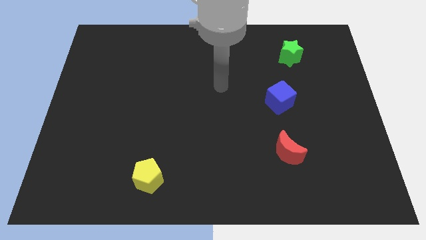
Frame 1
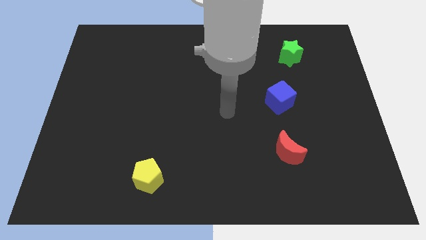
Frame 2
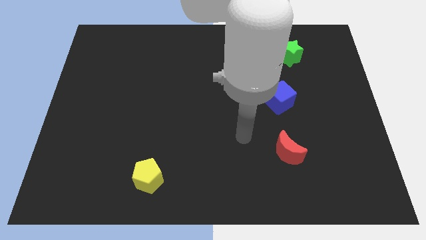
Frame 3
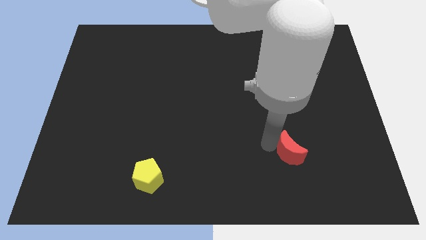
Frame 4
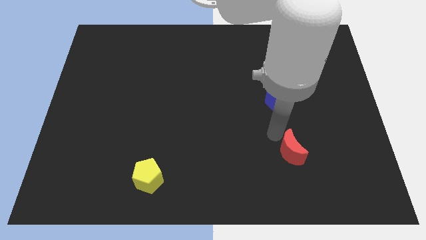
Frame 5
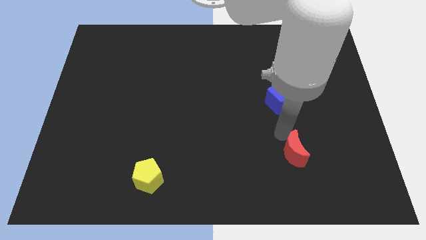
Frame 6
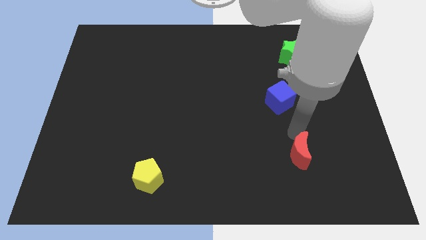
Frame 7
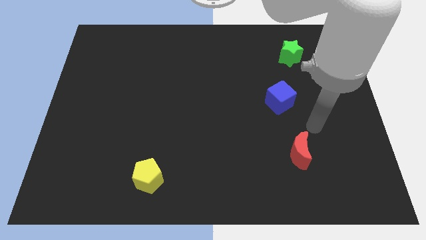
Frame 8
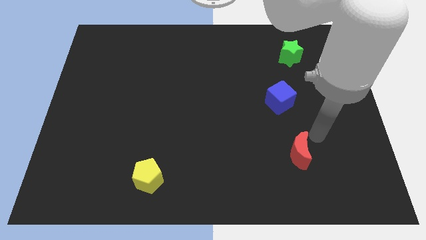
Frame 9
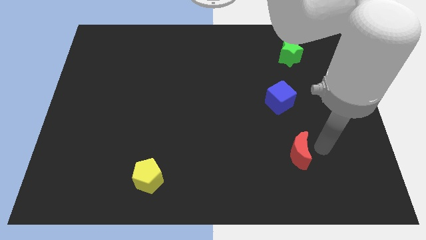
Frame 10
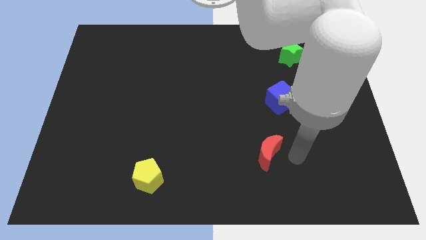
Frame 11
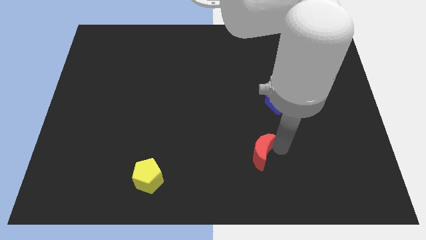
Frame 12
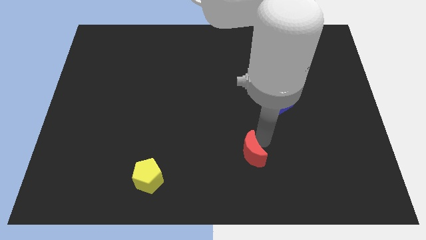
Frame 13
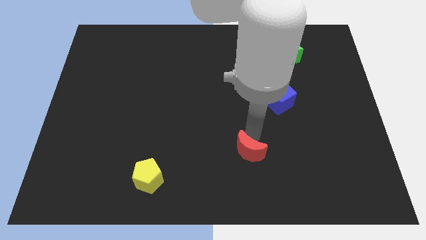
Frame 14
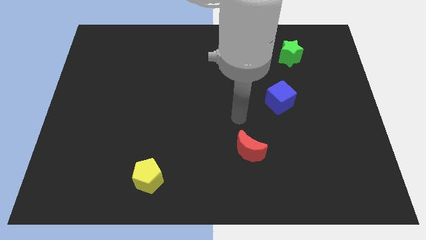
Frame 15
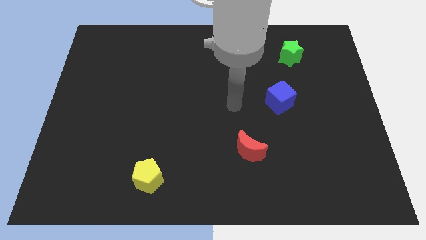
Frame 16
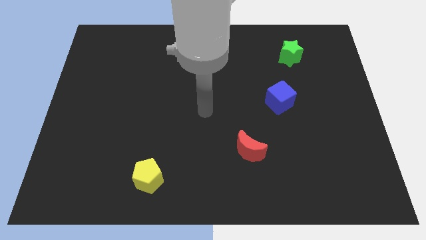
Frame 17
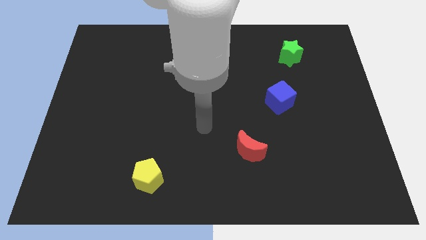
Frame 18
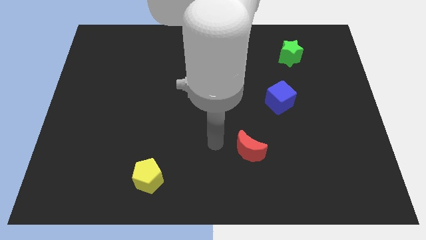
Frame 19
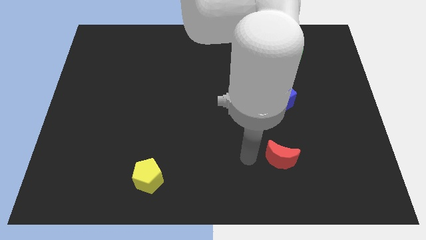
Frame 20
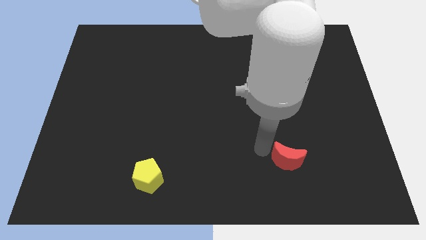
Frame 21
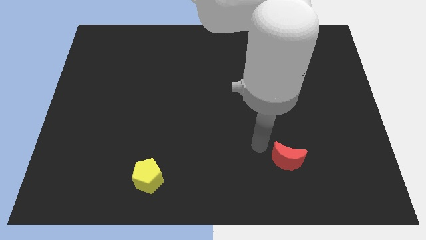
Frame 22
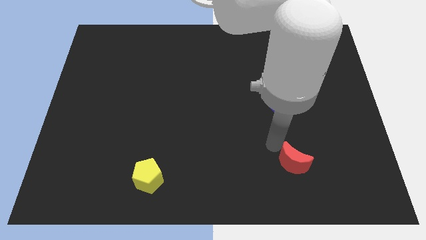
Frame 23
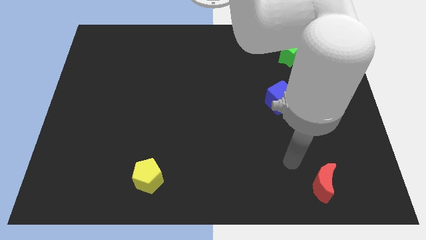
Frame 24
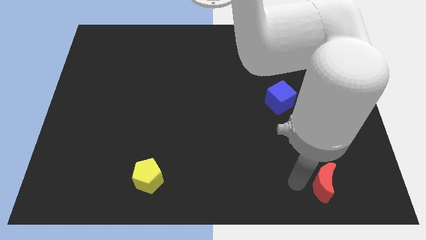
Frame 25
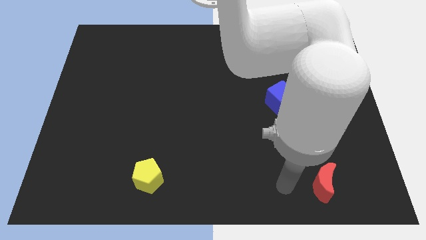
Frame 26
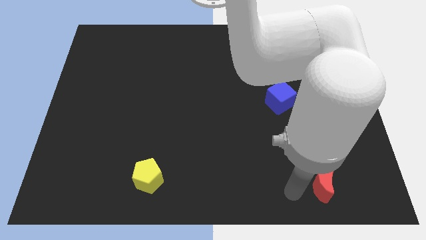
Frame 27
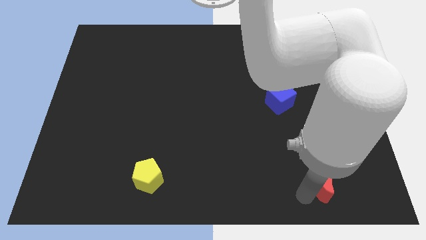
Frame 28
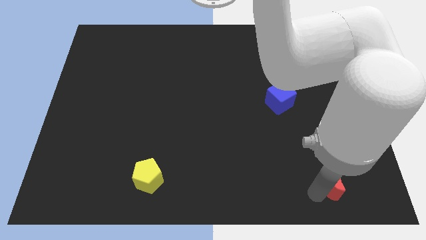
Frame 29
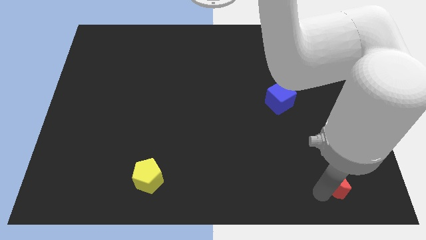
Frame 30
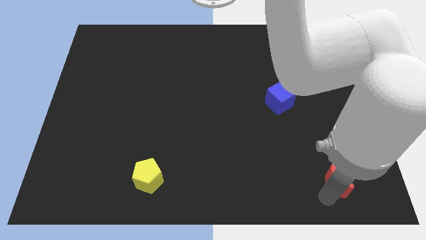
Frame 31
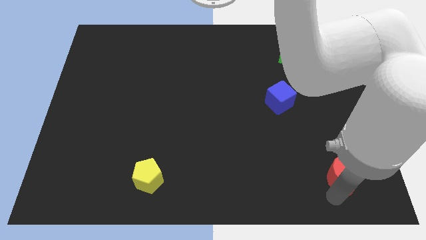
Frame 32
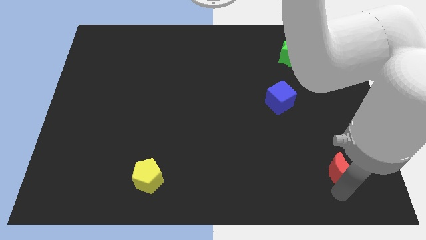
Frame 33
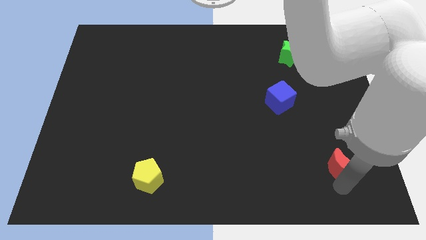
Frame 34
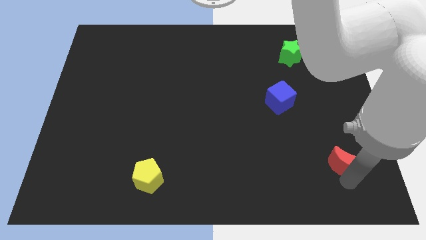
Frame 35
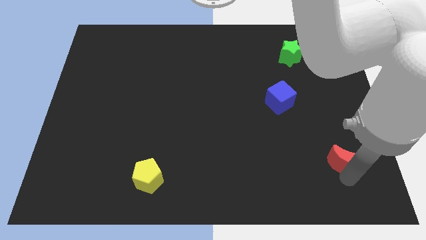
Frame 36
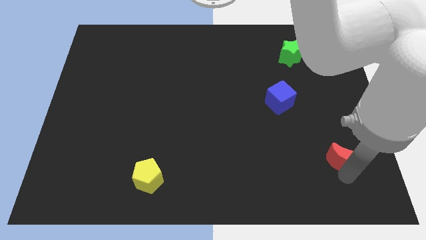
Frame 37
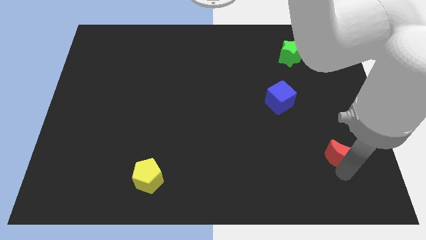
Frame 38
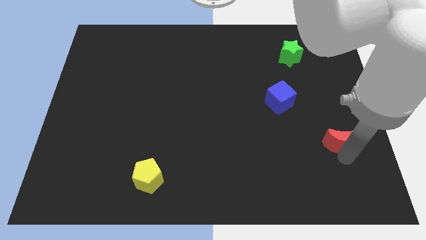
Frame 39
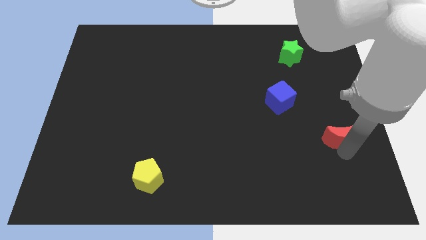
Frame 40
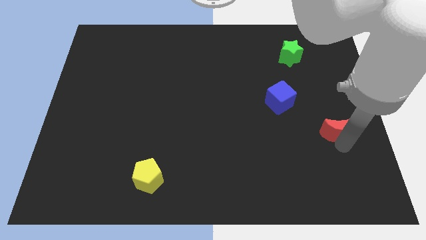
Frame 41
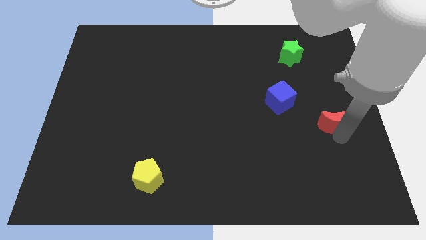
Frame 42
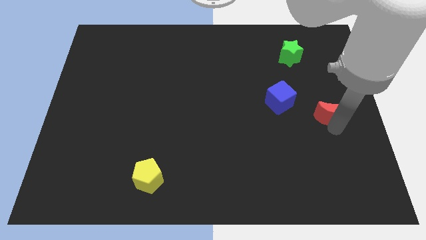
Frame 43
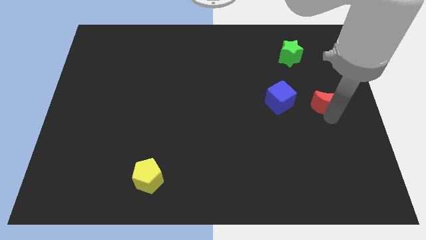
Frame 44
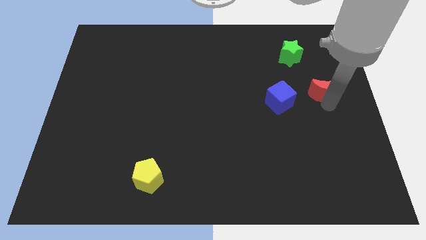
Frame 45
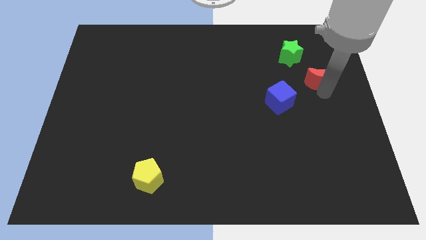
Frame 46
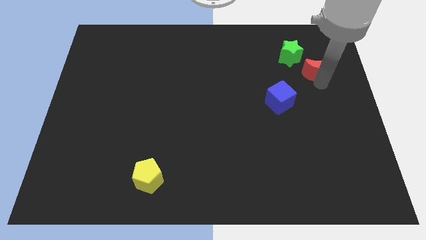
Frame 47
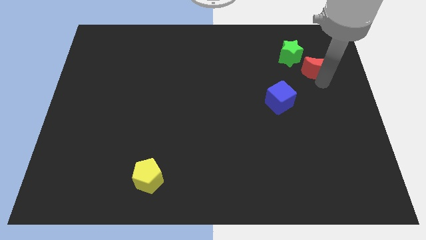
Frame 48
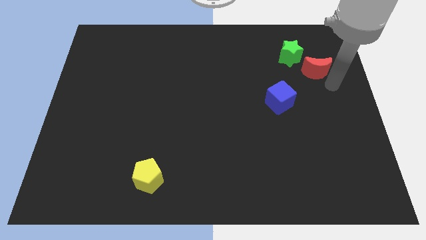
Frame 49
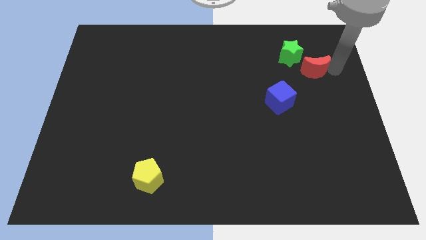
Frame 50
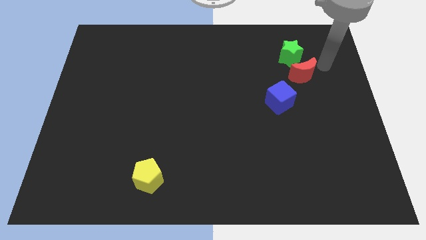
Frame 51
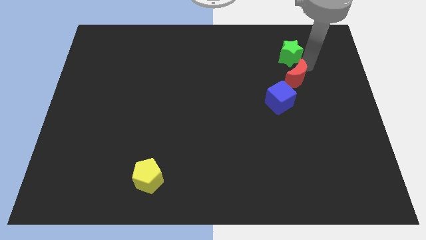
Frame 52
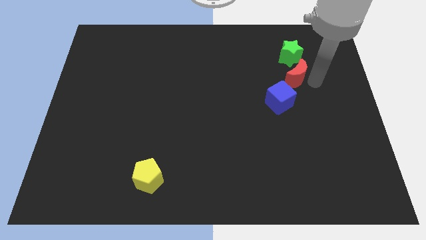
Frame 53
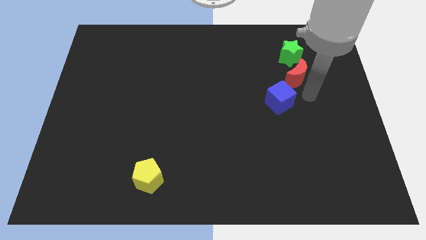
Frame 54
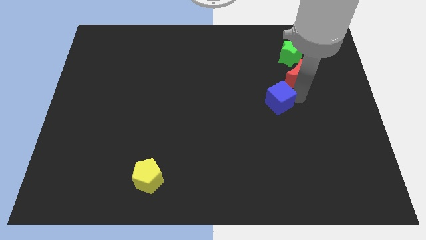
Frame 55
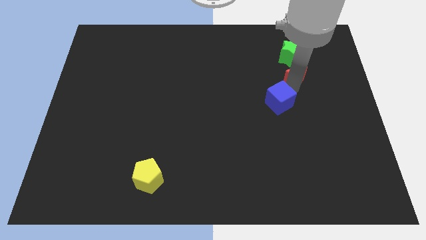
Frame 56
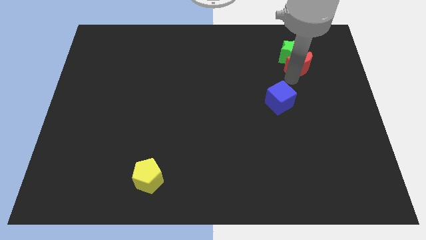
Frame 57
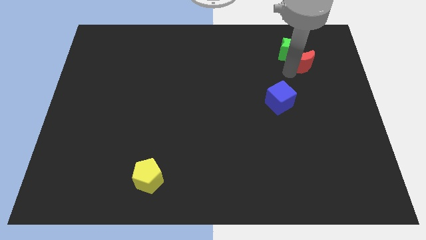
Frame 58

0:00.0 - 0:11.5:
move the moon to the green block

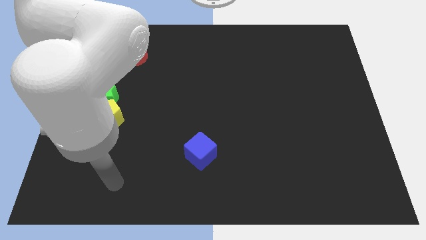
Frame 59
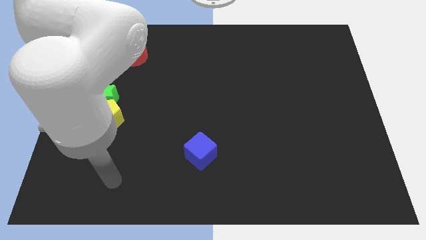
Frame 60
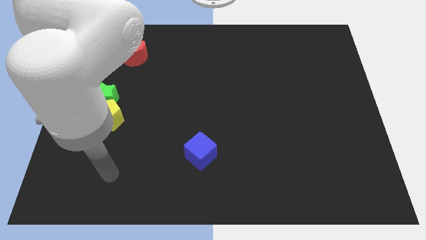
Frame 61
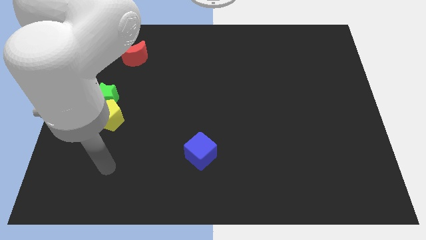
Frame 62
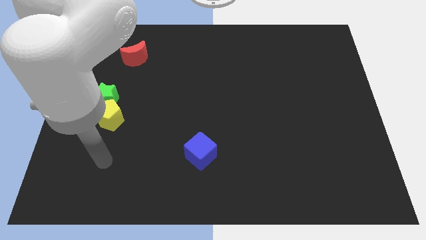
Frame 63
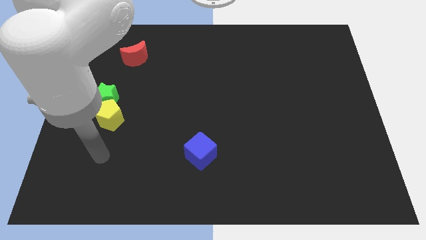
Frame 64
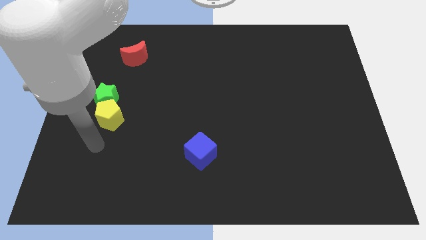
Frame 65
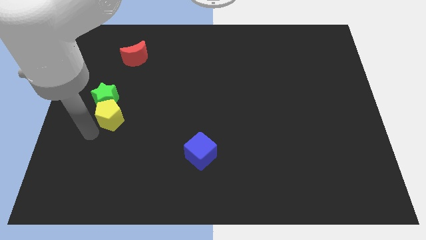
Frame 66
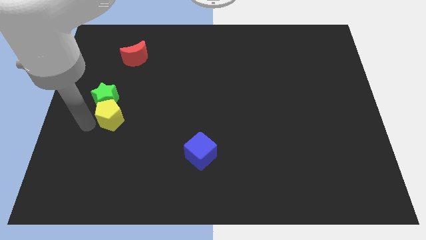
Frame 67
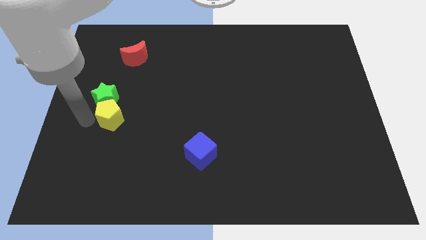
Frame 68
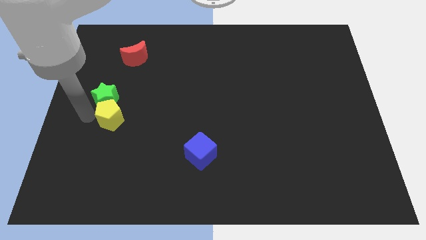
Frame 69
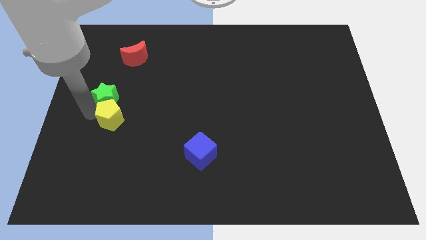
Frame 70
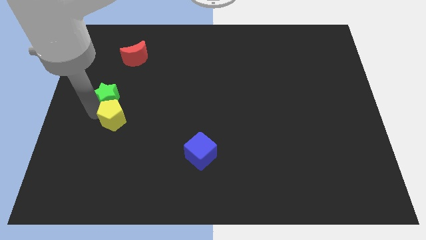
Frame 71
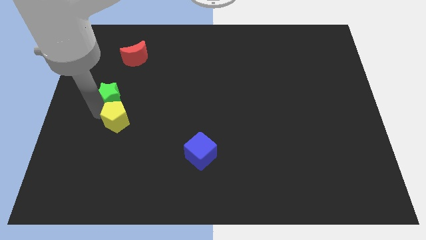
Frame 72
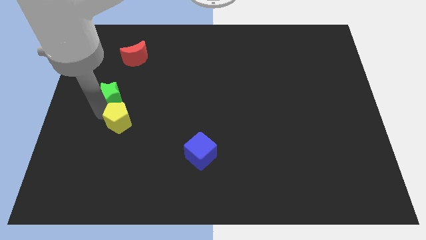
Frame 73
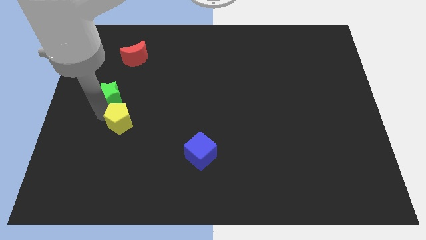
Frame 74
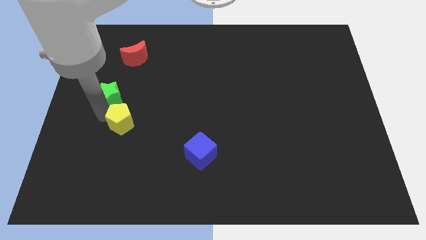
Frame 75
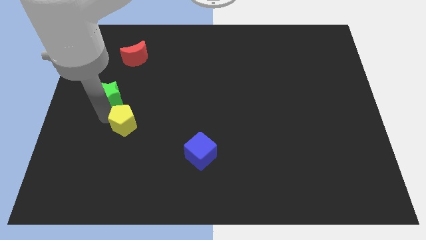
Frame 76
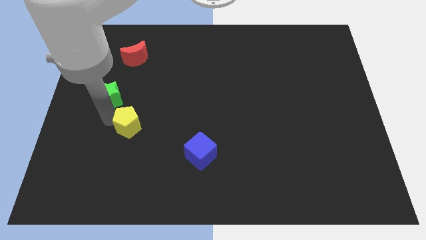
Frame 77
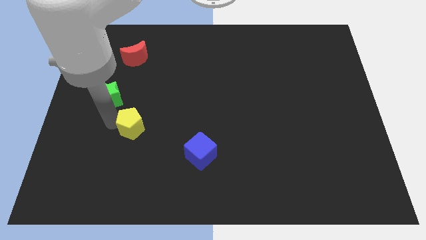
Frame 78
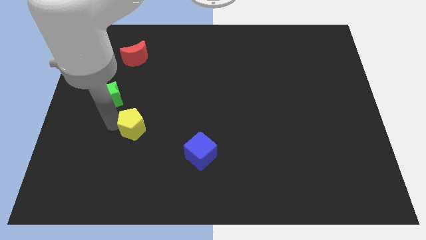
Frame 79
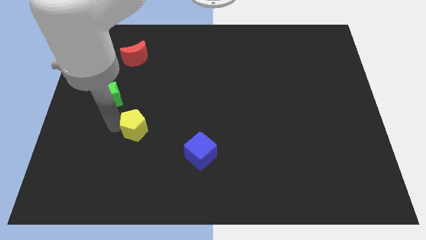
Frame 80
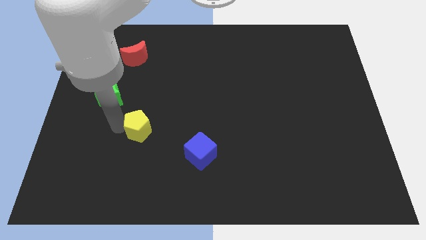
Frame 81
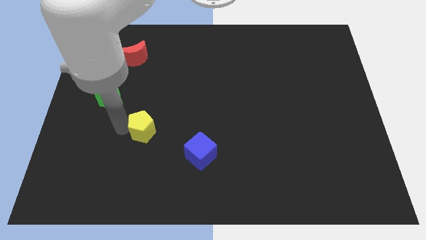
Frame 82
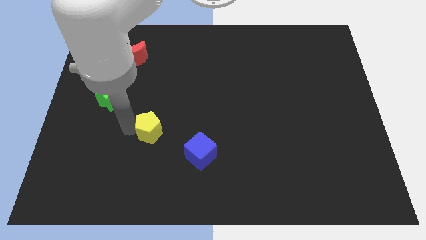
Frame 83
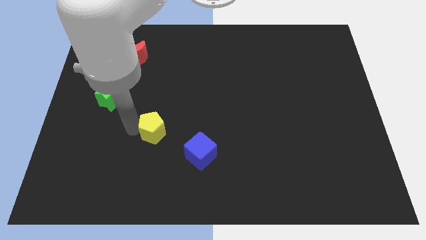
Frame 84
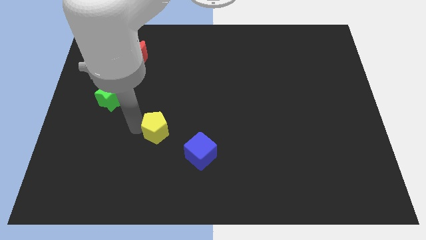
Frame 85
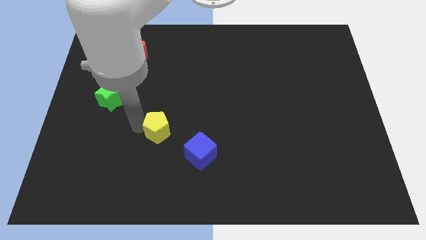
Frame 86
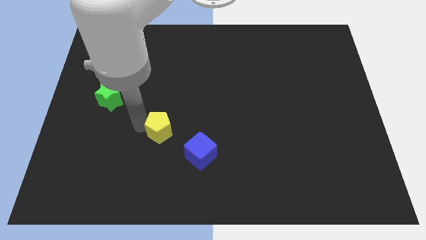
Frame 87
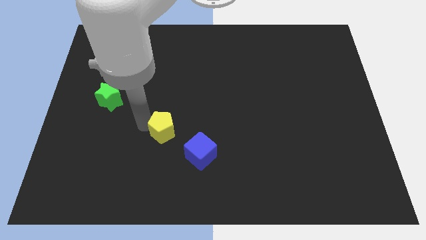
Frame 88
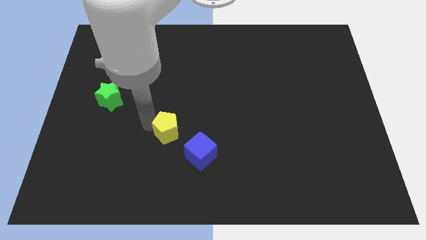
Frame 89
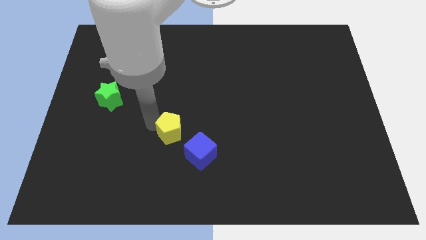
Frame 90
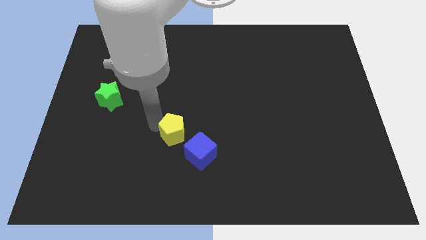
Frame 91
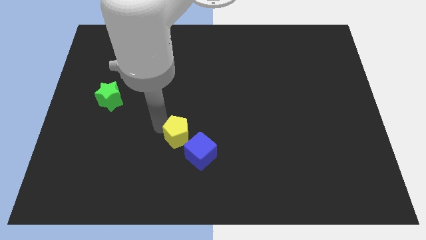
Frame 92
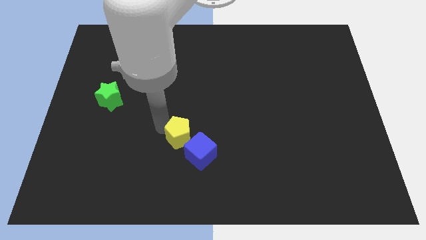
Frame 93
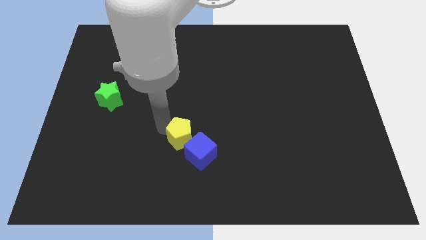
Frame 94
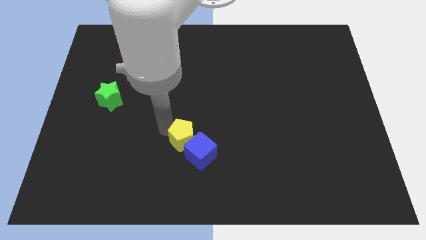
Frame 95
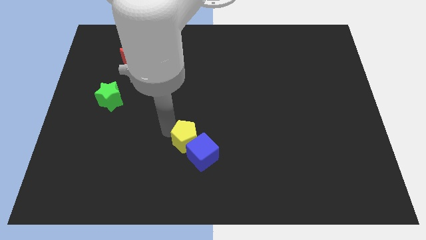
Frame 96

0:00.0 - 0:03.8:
push the yellow block close to the cube
